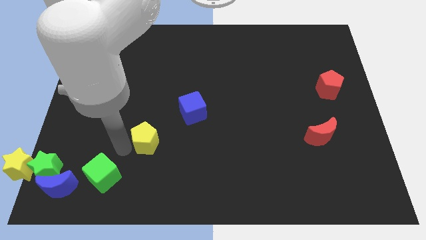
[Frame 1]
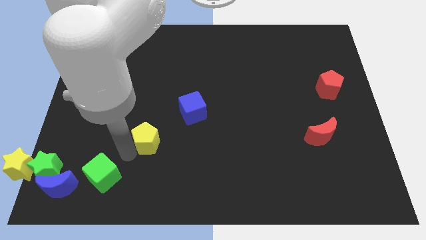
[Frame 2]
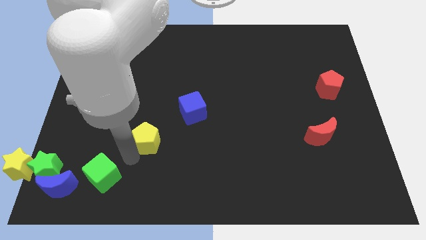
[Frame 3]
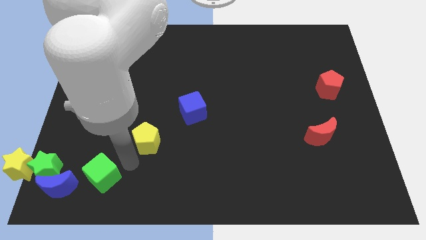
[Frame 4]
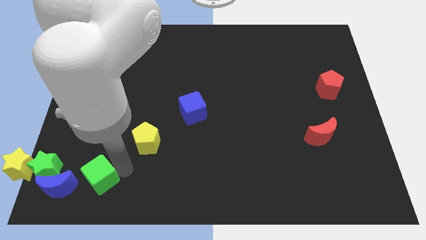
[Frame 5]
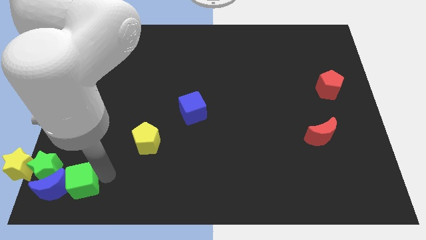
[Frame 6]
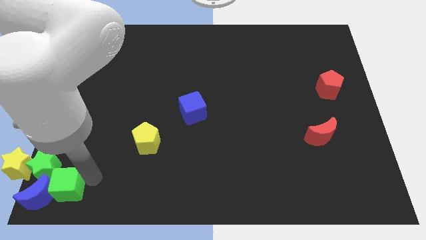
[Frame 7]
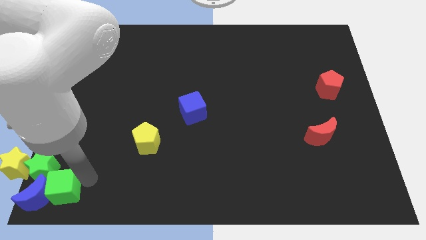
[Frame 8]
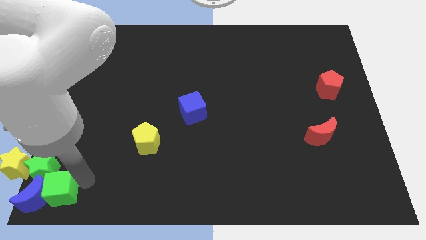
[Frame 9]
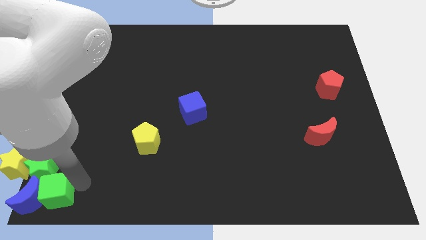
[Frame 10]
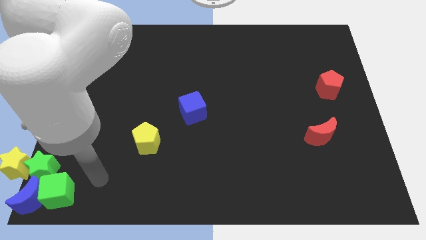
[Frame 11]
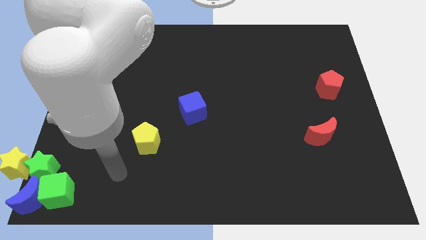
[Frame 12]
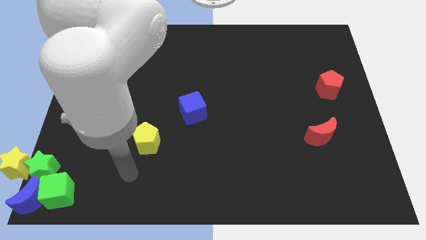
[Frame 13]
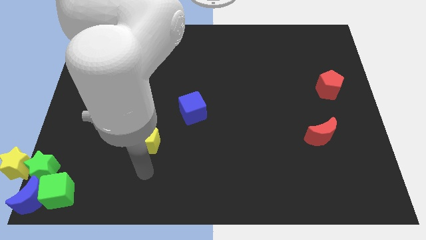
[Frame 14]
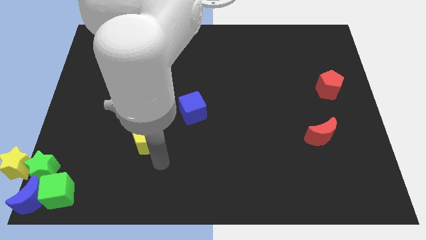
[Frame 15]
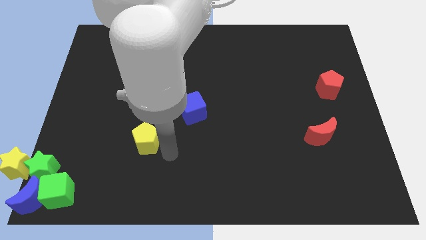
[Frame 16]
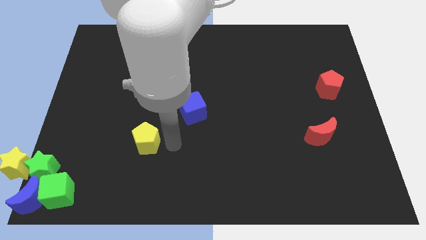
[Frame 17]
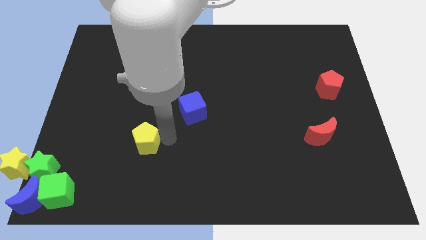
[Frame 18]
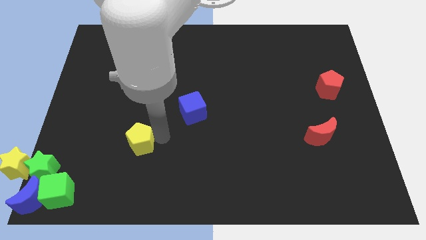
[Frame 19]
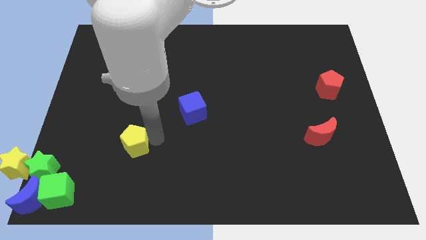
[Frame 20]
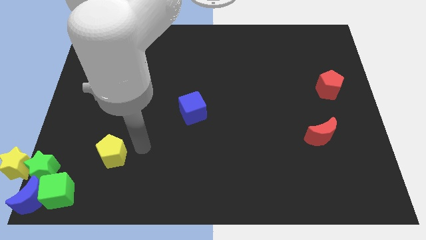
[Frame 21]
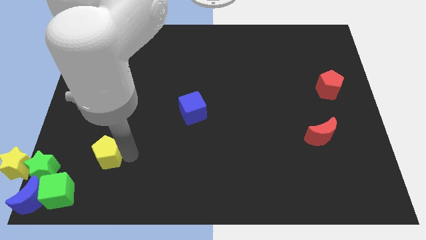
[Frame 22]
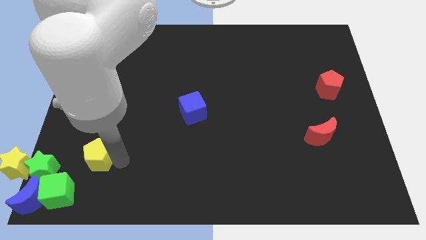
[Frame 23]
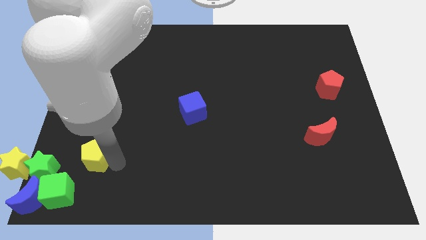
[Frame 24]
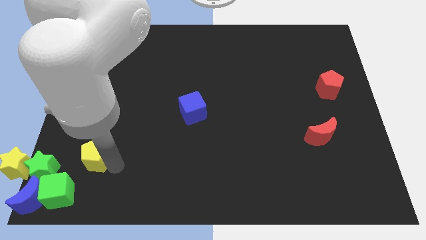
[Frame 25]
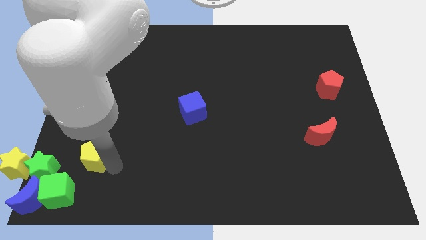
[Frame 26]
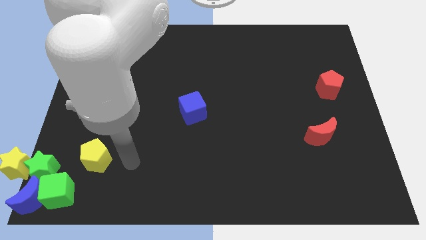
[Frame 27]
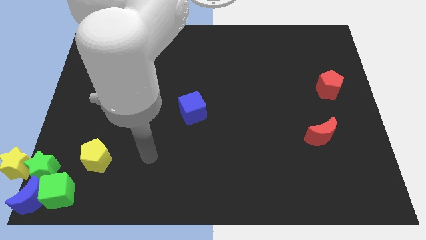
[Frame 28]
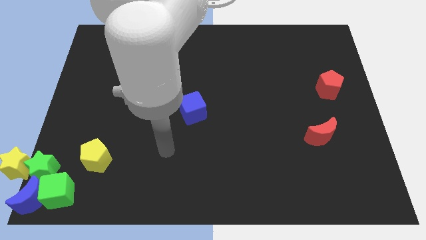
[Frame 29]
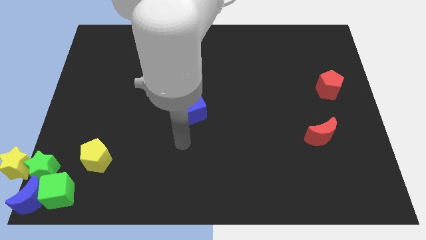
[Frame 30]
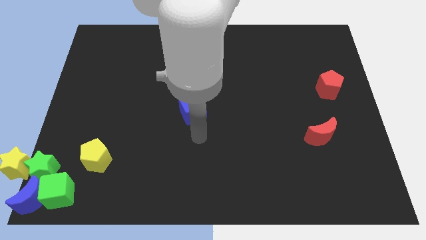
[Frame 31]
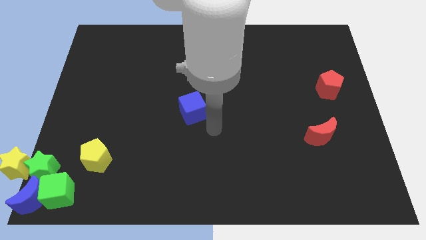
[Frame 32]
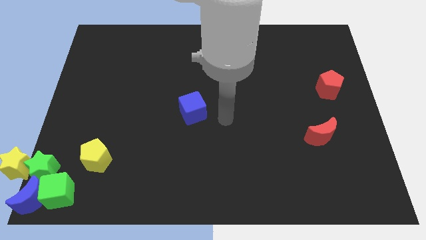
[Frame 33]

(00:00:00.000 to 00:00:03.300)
push the green cube and yellow pentagon to the bottom left corner of the board

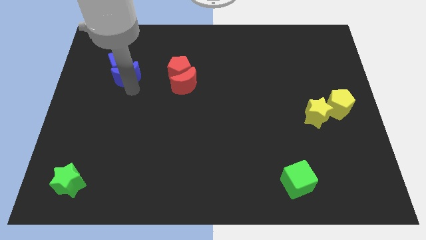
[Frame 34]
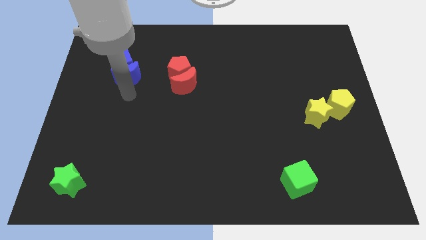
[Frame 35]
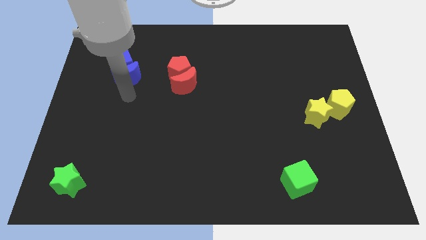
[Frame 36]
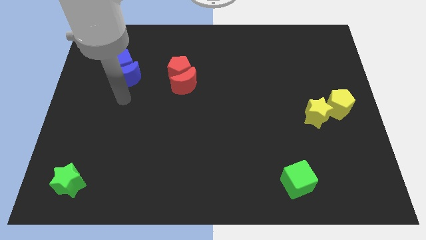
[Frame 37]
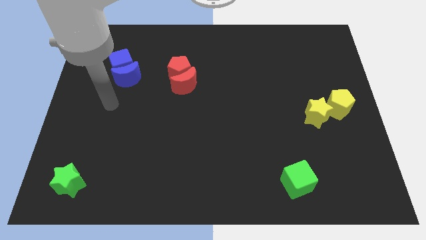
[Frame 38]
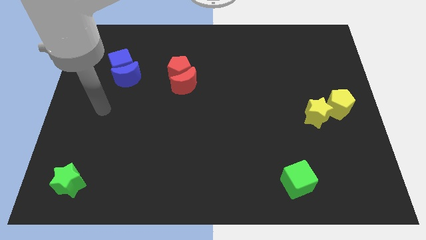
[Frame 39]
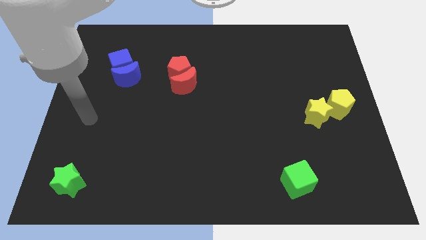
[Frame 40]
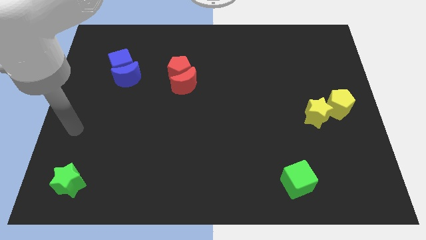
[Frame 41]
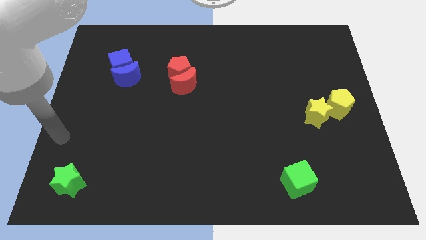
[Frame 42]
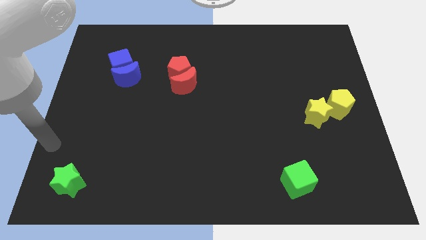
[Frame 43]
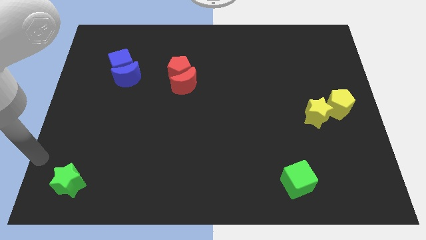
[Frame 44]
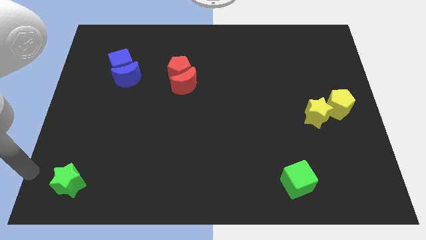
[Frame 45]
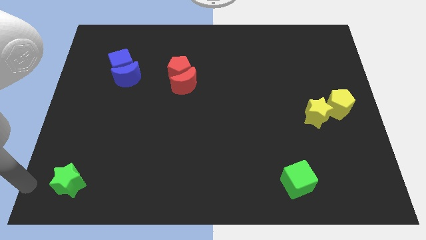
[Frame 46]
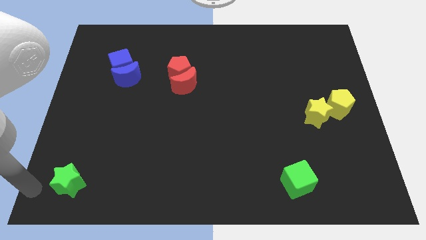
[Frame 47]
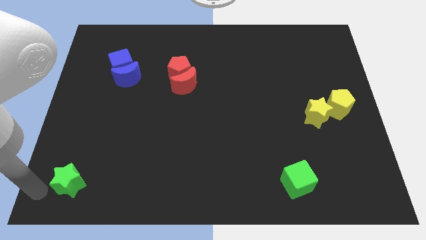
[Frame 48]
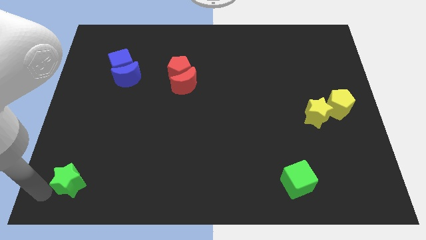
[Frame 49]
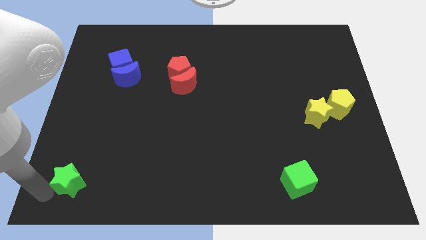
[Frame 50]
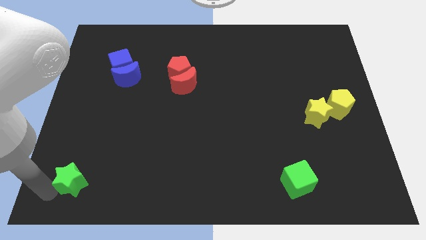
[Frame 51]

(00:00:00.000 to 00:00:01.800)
move the arm to the left of the green star

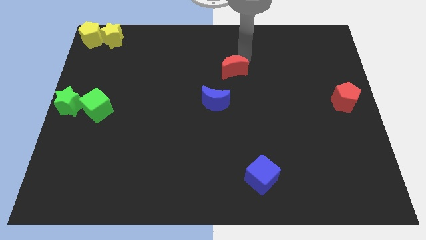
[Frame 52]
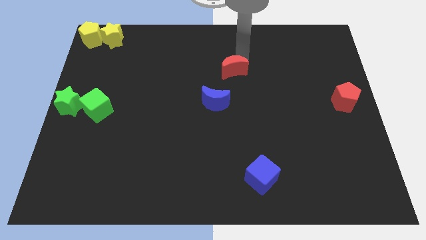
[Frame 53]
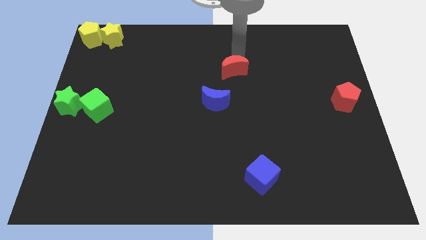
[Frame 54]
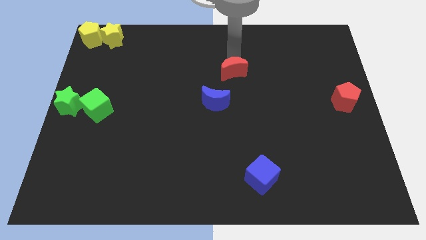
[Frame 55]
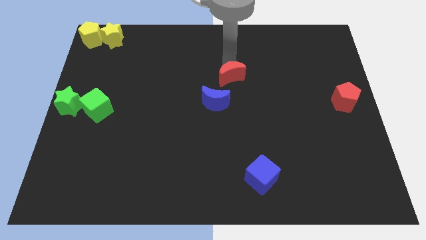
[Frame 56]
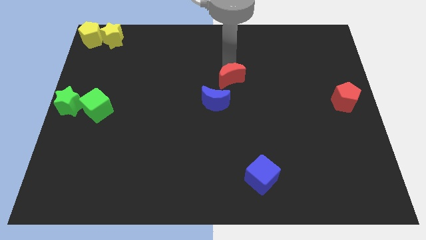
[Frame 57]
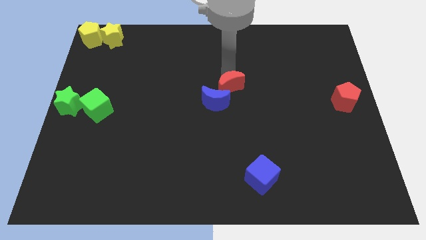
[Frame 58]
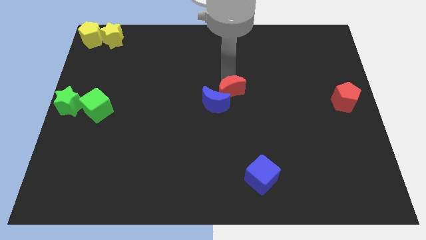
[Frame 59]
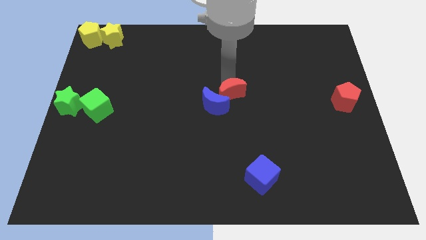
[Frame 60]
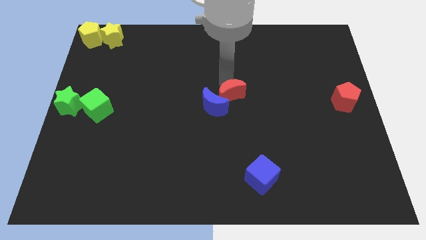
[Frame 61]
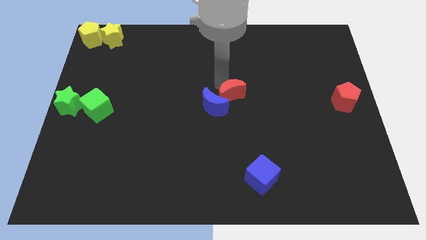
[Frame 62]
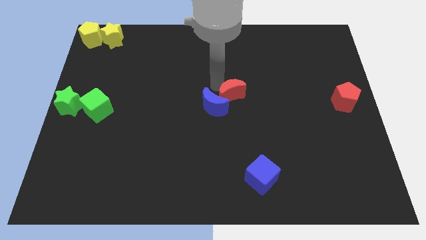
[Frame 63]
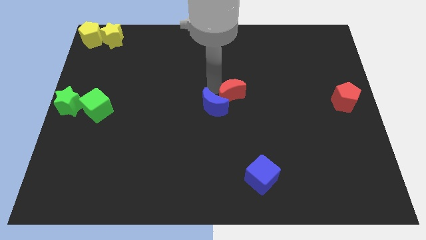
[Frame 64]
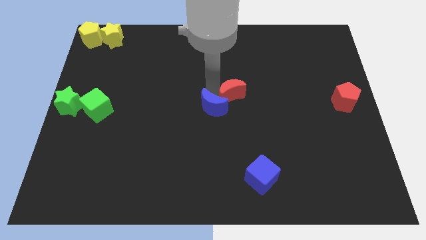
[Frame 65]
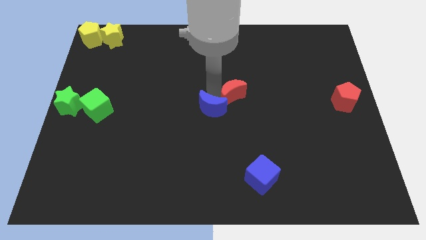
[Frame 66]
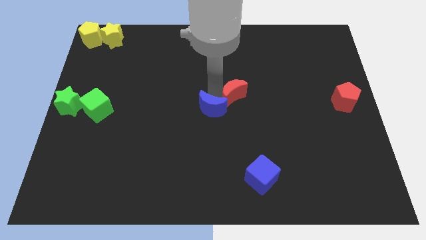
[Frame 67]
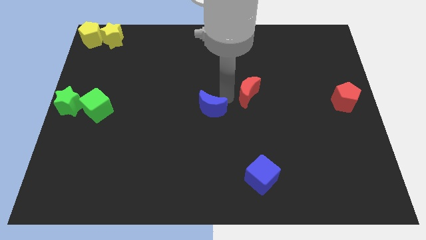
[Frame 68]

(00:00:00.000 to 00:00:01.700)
push the blue moon with the red moon

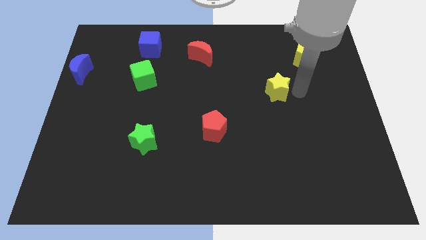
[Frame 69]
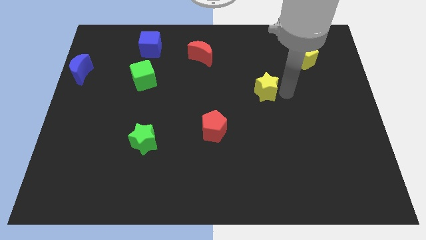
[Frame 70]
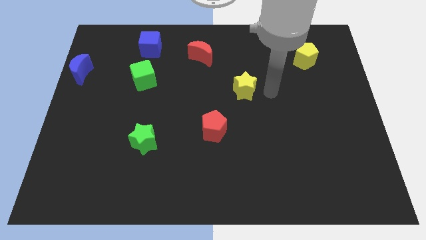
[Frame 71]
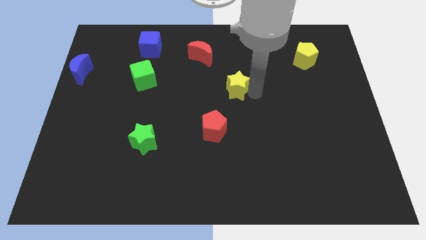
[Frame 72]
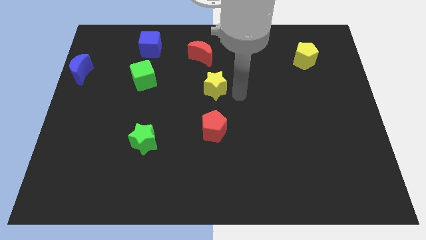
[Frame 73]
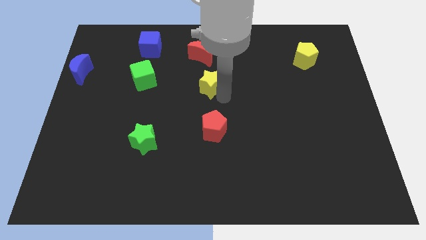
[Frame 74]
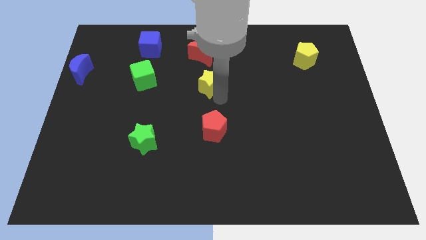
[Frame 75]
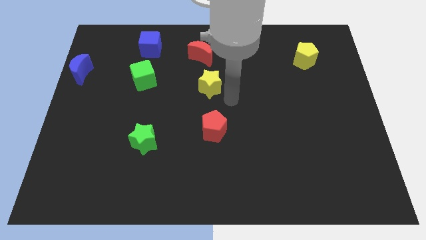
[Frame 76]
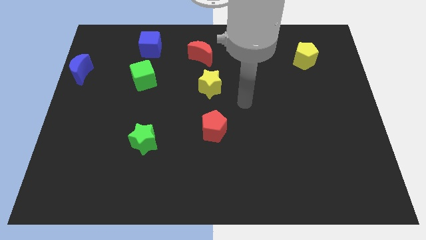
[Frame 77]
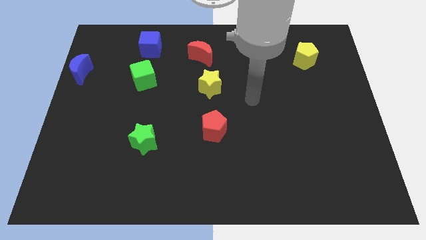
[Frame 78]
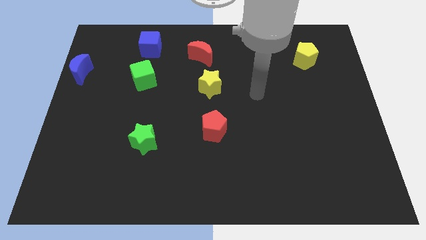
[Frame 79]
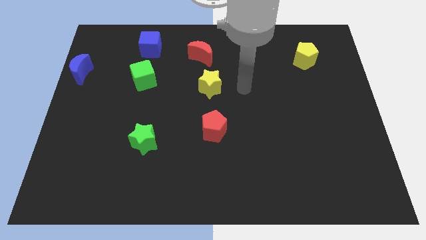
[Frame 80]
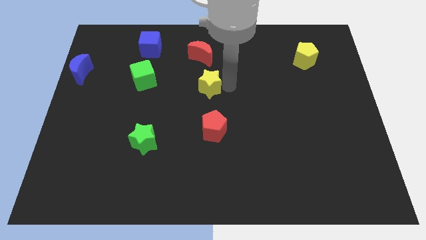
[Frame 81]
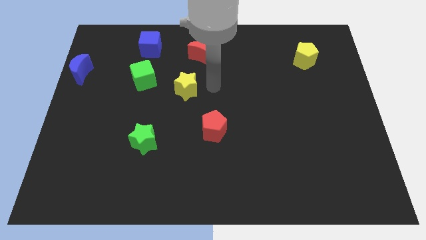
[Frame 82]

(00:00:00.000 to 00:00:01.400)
push the yellow star to the center of the board

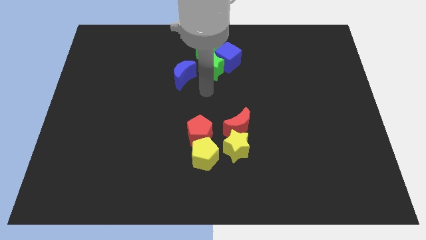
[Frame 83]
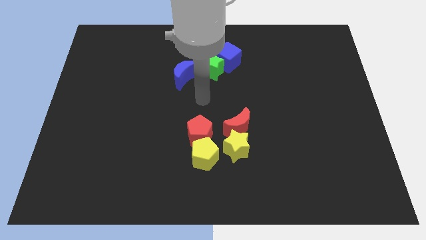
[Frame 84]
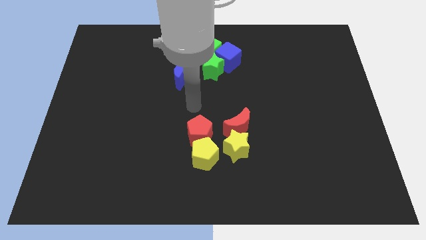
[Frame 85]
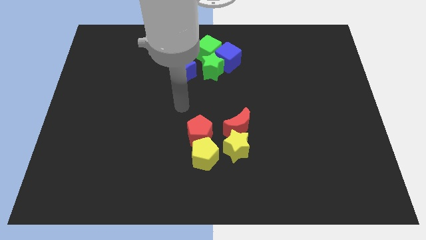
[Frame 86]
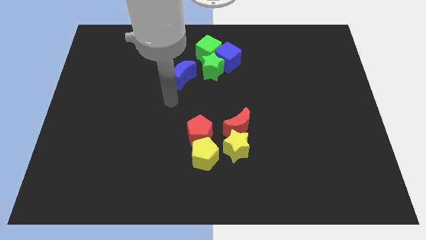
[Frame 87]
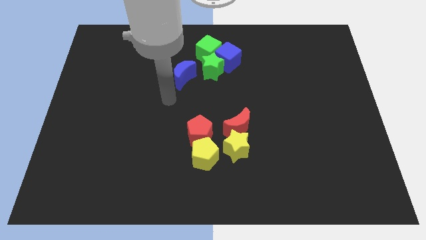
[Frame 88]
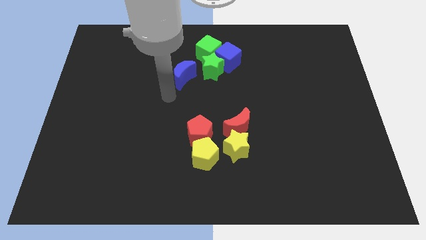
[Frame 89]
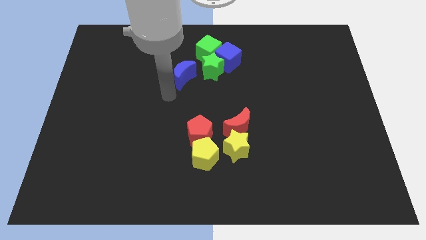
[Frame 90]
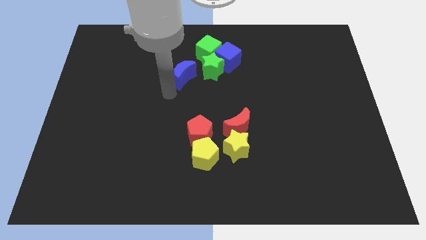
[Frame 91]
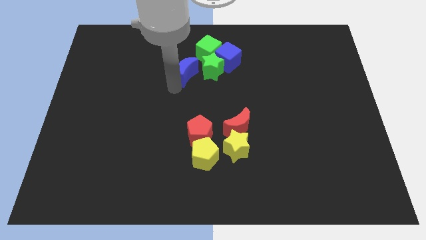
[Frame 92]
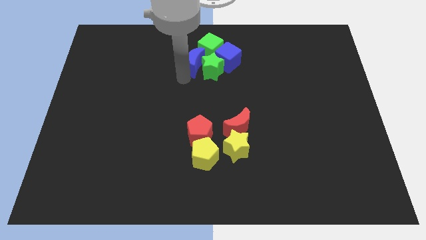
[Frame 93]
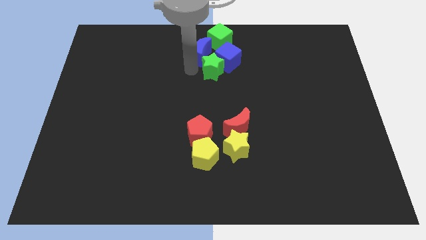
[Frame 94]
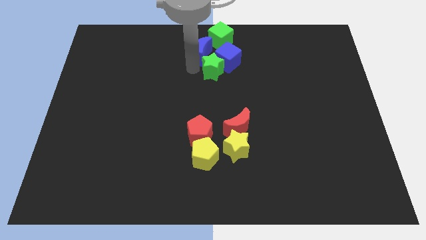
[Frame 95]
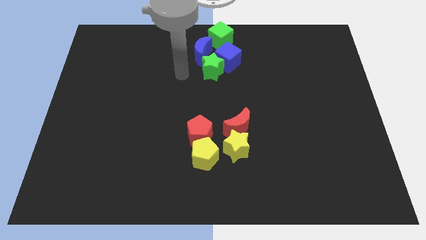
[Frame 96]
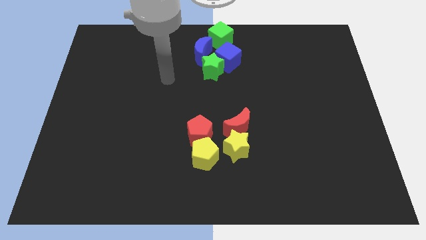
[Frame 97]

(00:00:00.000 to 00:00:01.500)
push the blue moon into the green cube
